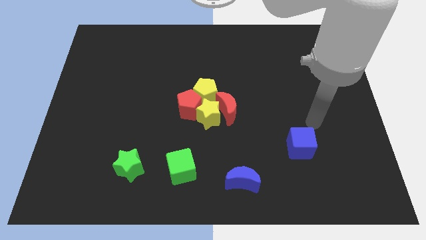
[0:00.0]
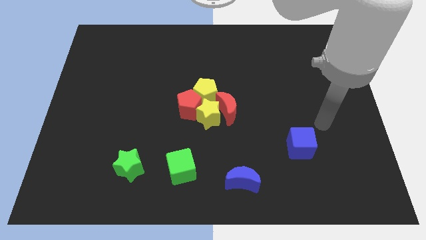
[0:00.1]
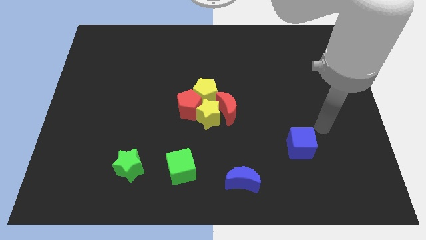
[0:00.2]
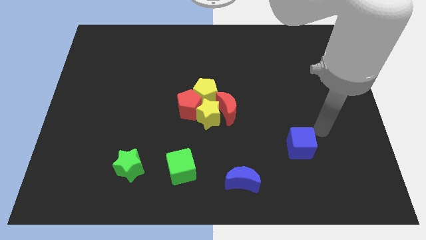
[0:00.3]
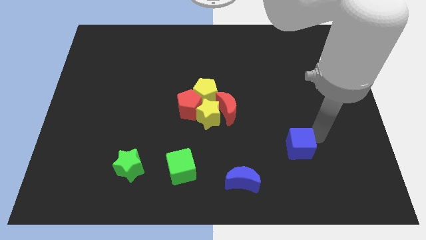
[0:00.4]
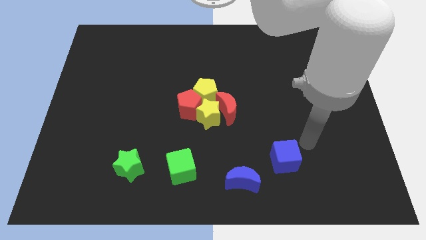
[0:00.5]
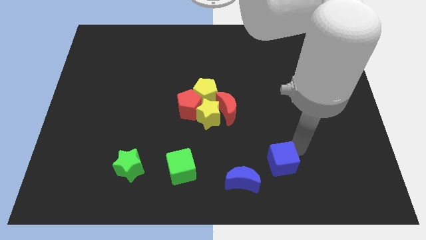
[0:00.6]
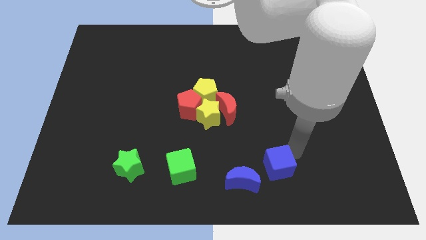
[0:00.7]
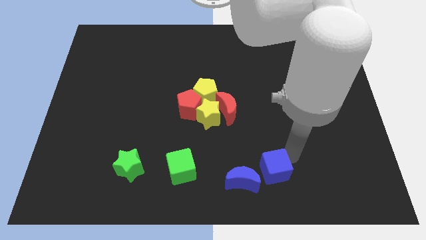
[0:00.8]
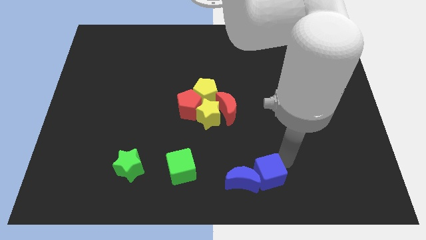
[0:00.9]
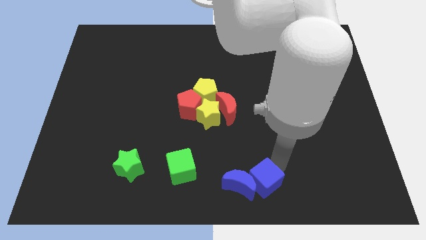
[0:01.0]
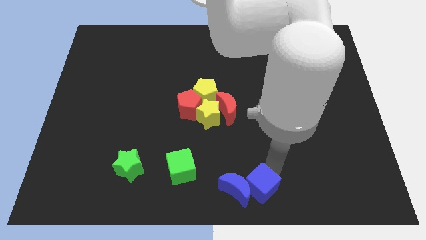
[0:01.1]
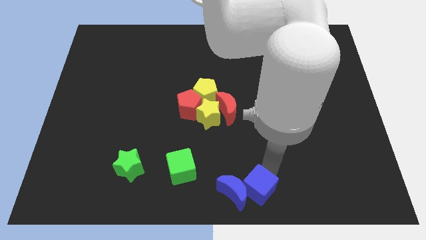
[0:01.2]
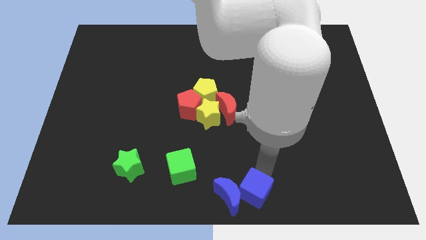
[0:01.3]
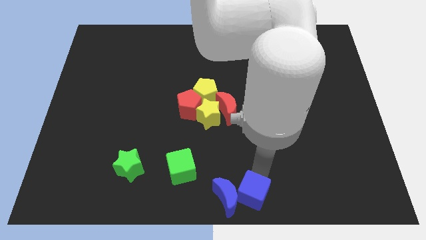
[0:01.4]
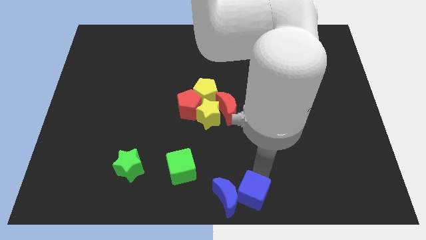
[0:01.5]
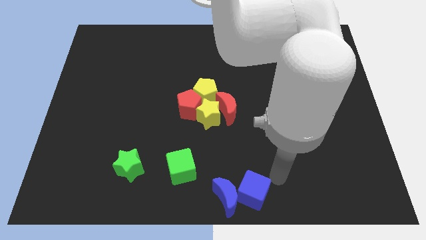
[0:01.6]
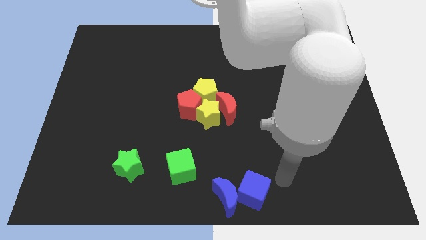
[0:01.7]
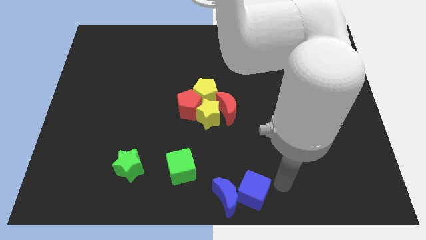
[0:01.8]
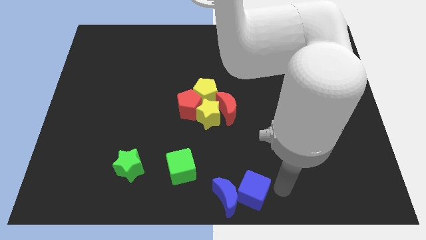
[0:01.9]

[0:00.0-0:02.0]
move blue cubes to the bottom middle of the board

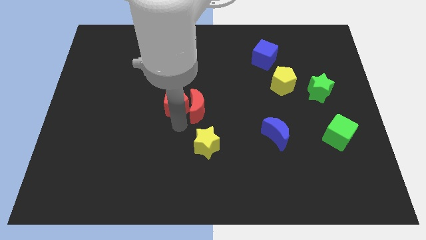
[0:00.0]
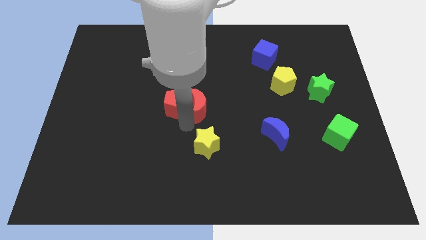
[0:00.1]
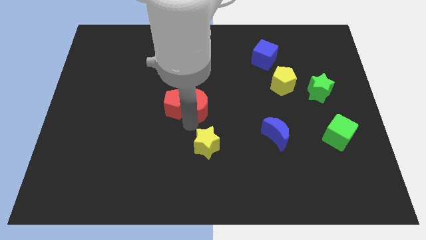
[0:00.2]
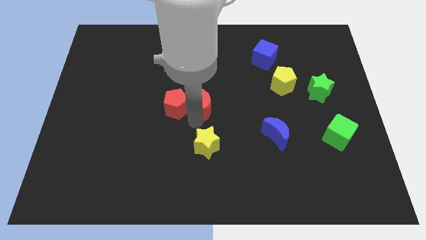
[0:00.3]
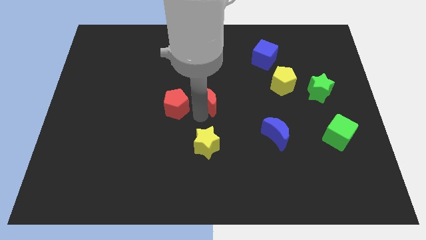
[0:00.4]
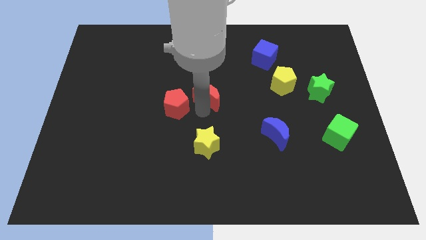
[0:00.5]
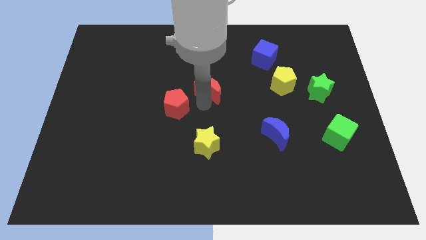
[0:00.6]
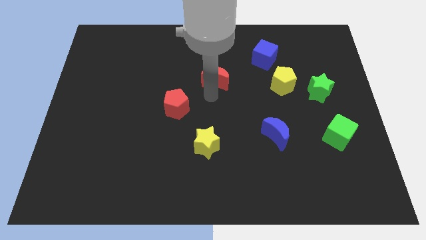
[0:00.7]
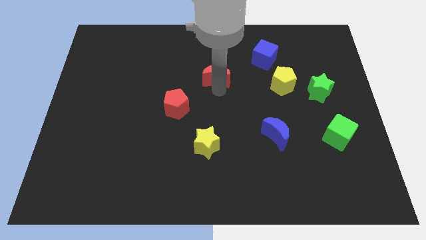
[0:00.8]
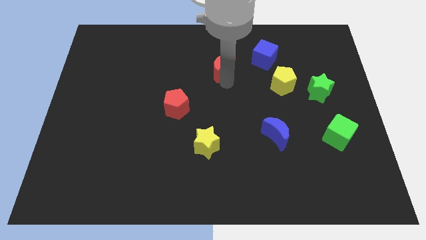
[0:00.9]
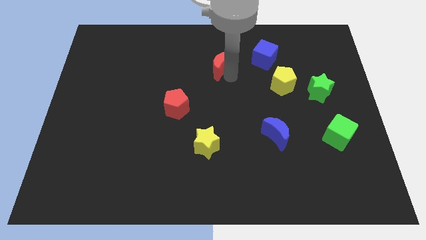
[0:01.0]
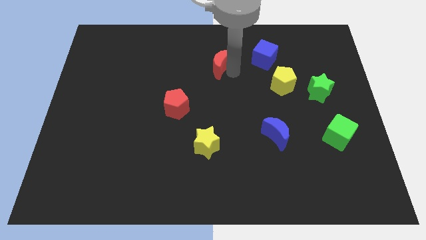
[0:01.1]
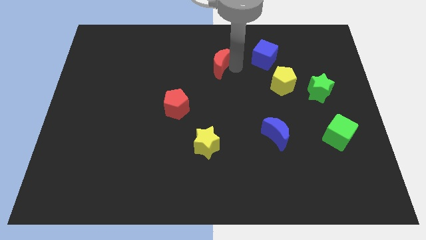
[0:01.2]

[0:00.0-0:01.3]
move the red moon to the right of the blue cube

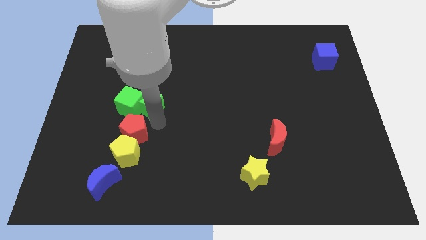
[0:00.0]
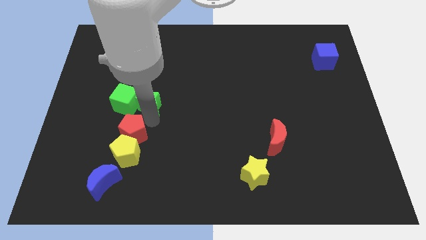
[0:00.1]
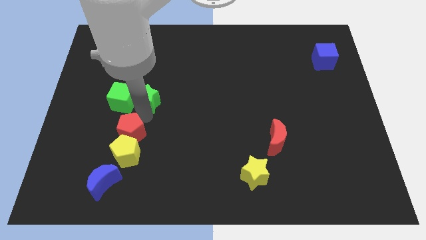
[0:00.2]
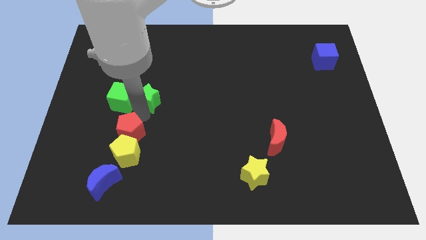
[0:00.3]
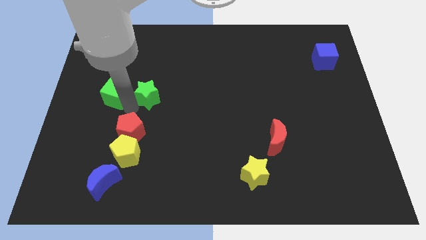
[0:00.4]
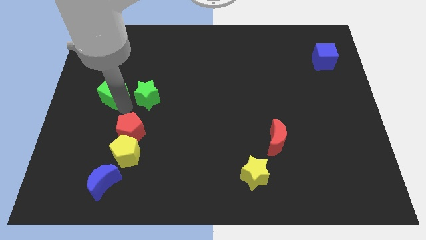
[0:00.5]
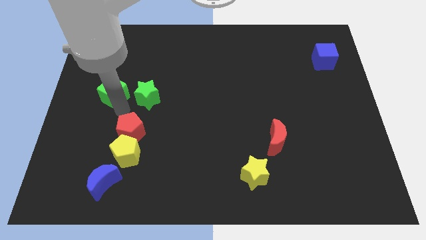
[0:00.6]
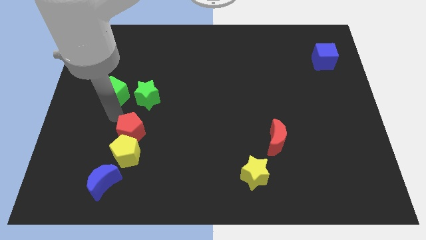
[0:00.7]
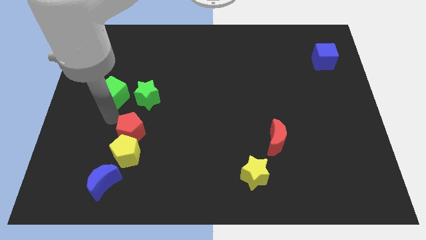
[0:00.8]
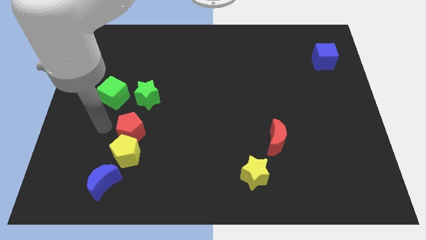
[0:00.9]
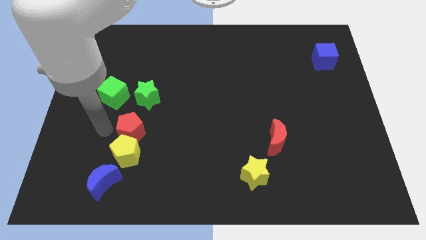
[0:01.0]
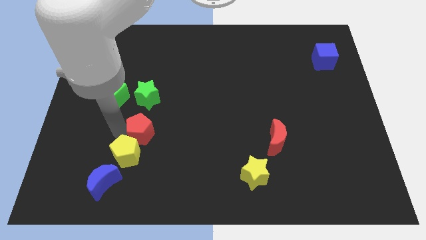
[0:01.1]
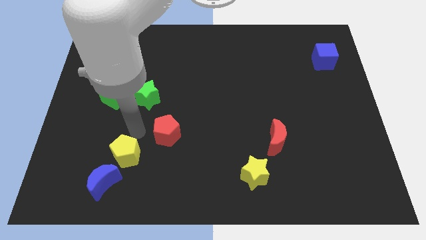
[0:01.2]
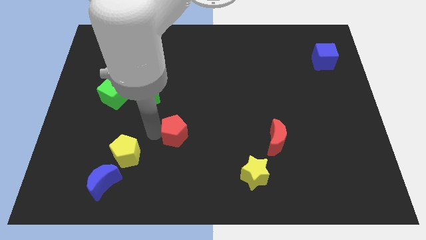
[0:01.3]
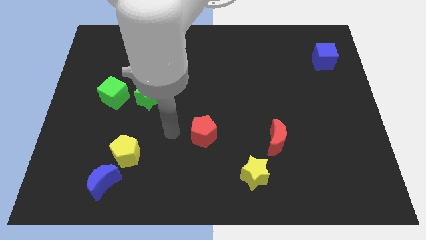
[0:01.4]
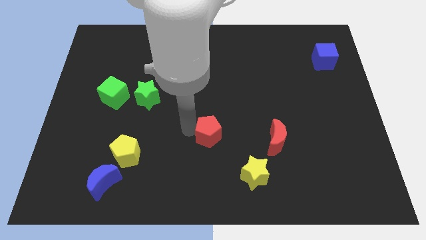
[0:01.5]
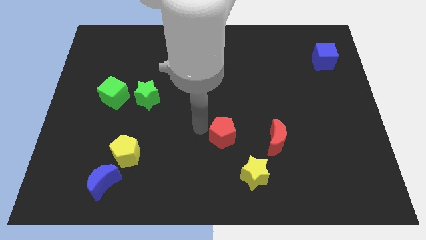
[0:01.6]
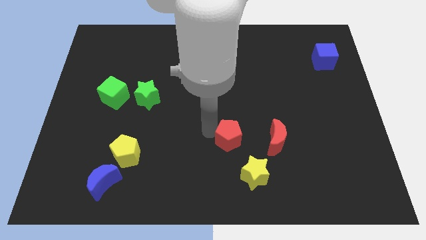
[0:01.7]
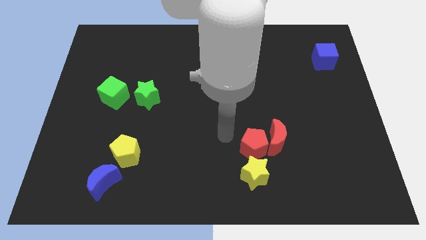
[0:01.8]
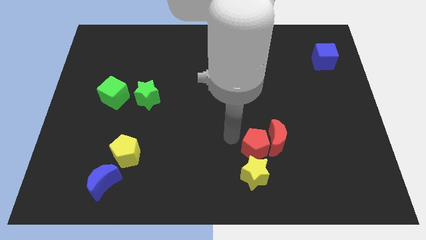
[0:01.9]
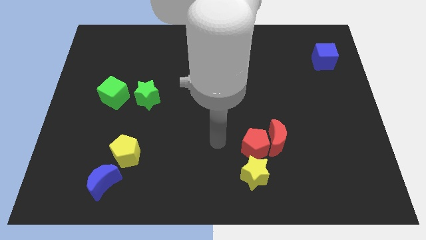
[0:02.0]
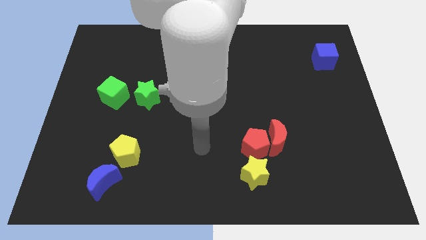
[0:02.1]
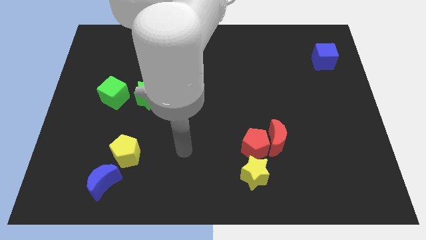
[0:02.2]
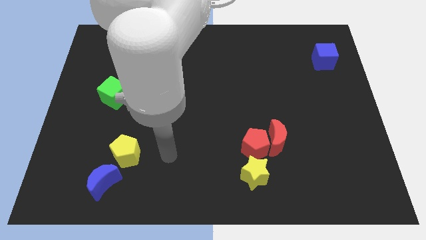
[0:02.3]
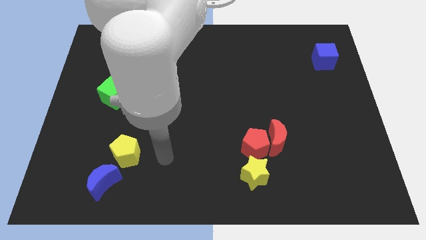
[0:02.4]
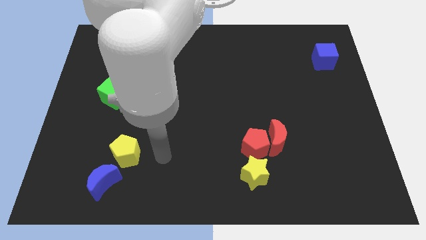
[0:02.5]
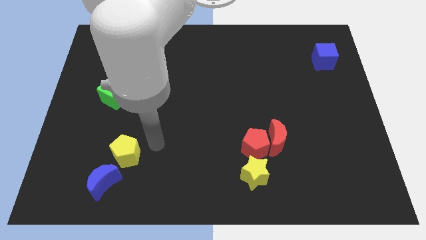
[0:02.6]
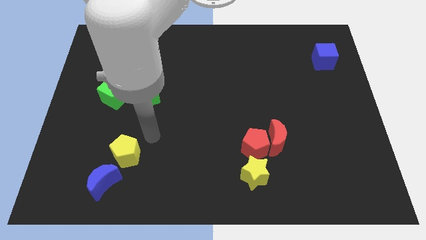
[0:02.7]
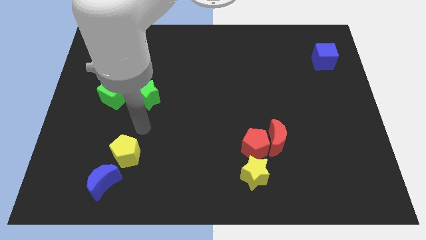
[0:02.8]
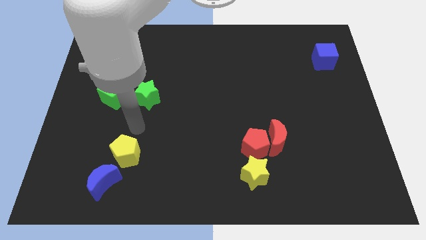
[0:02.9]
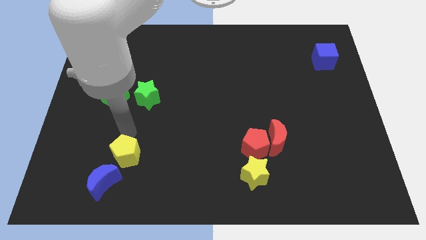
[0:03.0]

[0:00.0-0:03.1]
push red pentagon in to red moon

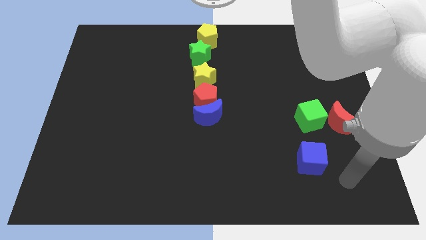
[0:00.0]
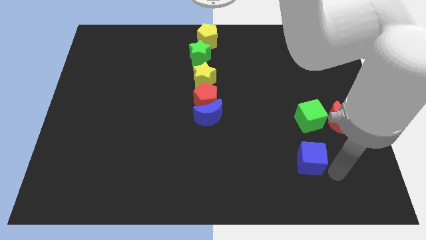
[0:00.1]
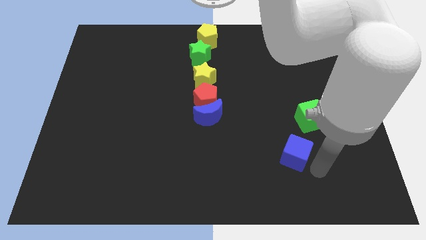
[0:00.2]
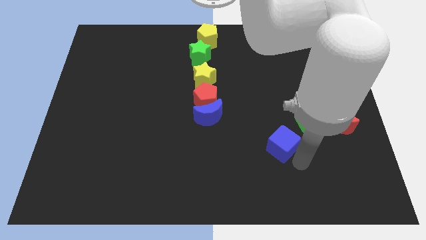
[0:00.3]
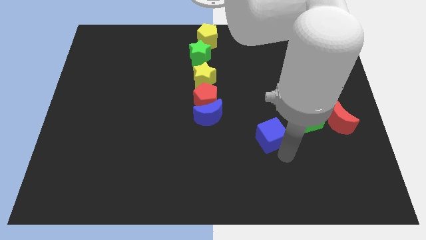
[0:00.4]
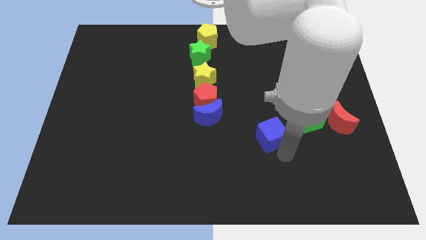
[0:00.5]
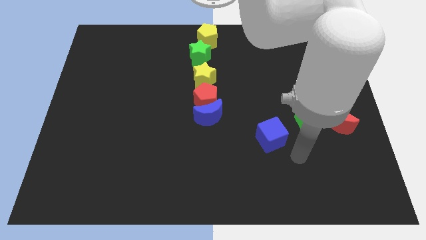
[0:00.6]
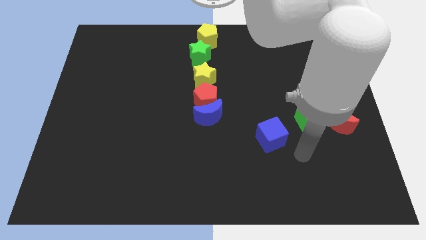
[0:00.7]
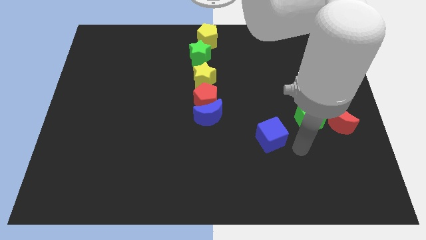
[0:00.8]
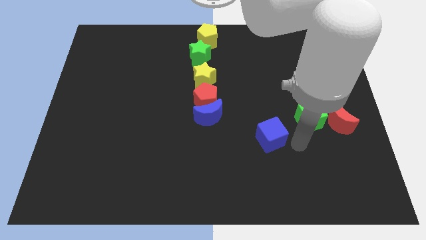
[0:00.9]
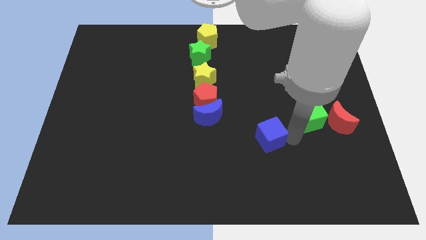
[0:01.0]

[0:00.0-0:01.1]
push the blue cube upward

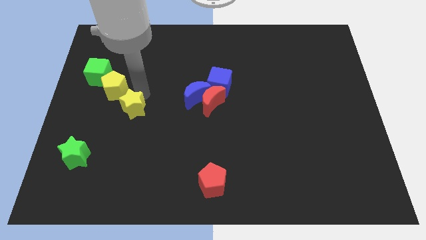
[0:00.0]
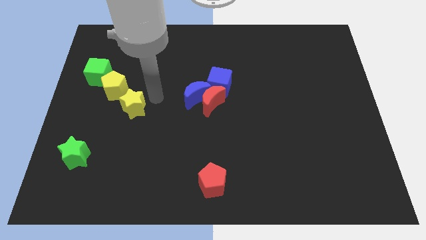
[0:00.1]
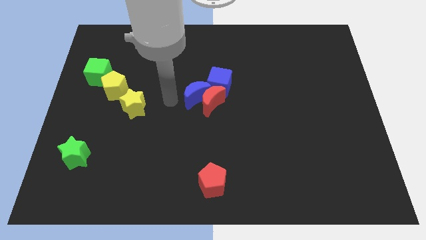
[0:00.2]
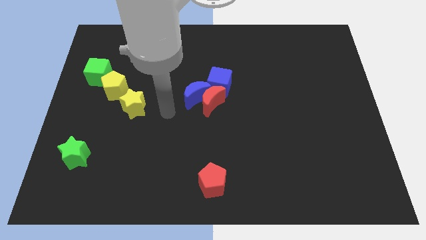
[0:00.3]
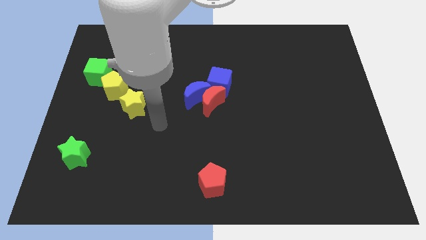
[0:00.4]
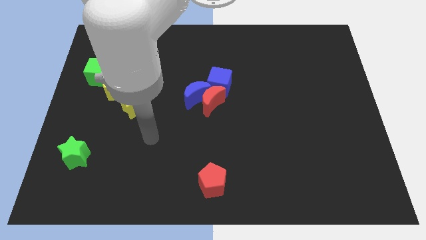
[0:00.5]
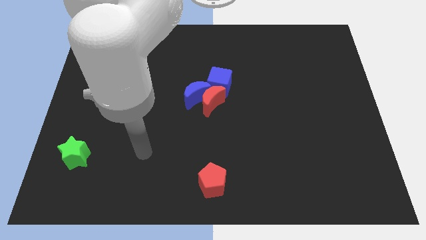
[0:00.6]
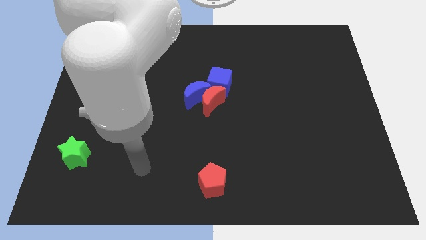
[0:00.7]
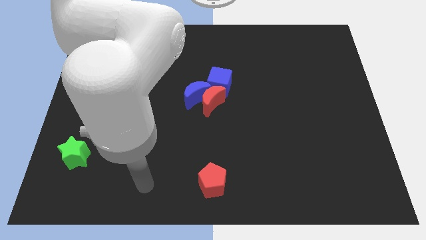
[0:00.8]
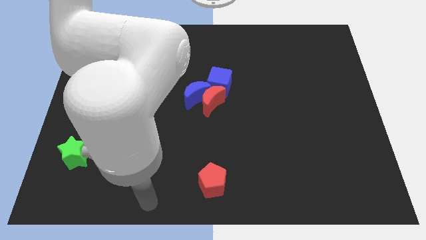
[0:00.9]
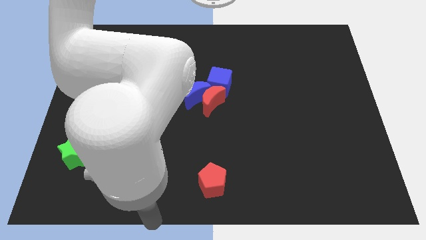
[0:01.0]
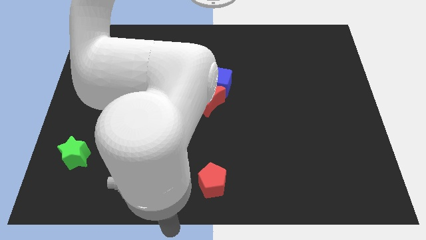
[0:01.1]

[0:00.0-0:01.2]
move your arm towards bottom of the board

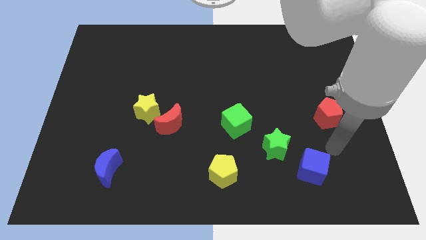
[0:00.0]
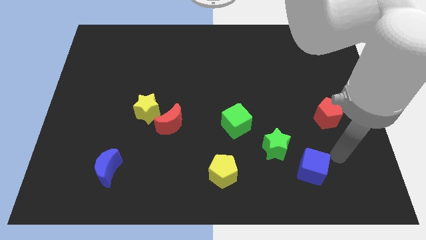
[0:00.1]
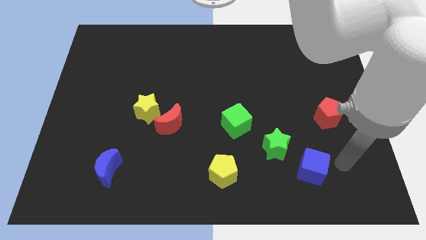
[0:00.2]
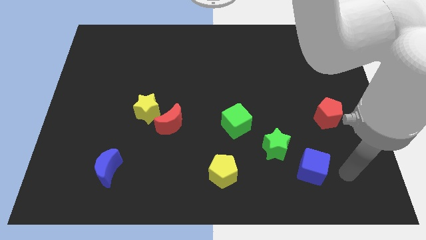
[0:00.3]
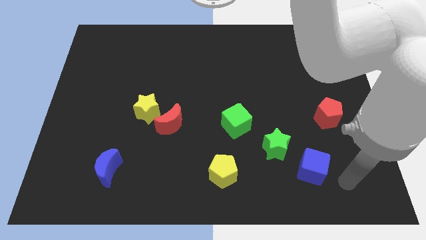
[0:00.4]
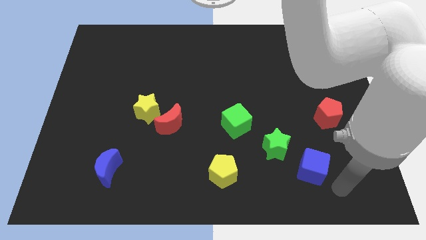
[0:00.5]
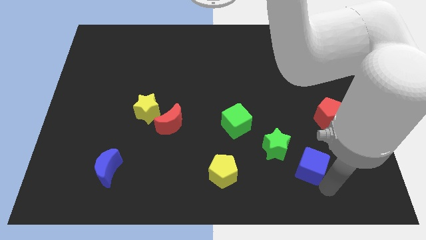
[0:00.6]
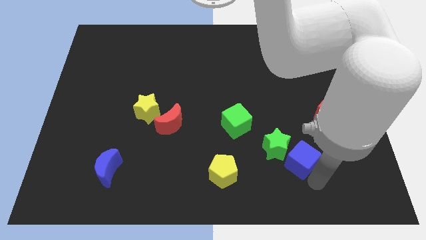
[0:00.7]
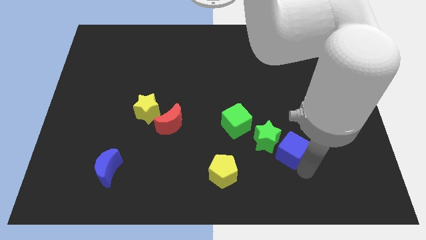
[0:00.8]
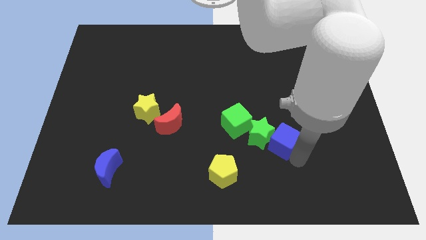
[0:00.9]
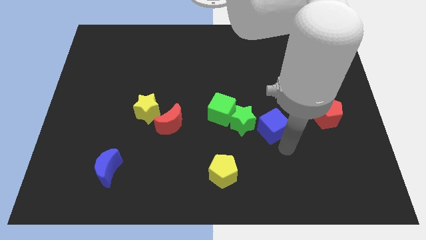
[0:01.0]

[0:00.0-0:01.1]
push the blue cube along with the green star to near to the green cube